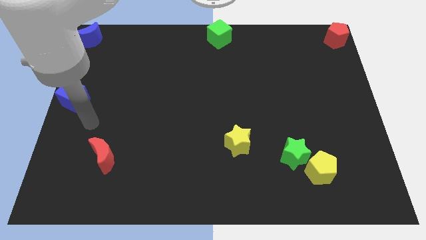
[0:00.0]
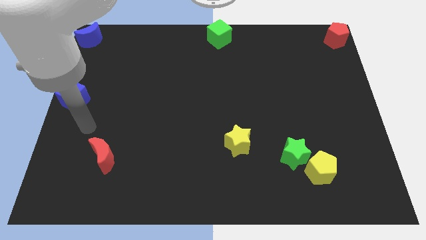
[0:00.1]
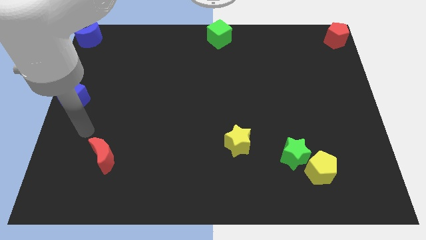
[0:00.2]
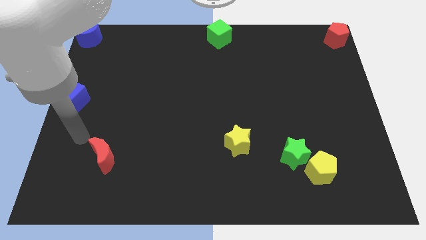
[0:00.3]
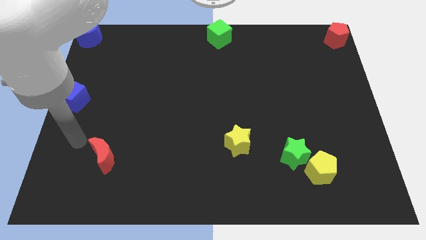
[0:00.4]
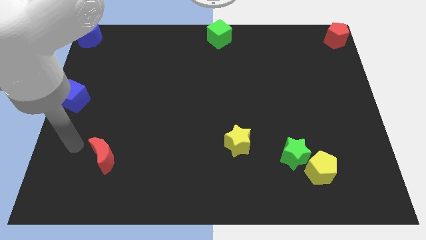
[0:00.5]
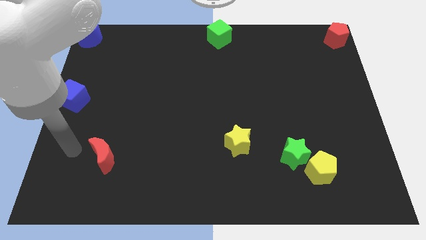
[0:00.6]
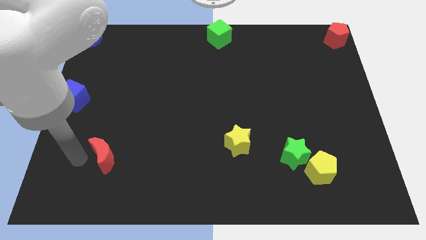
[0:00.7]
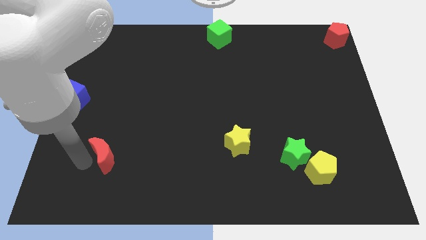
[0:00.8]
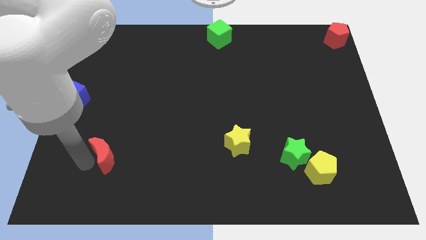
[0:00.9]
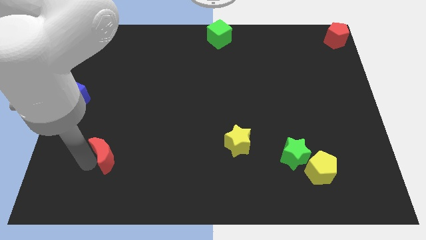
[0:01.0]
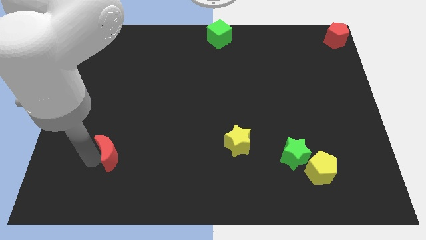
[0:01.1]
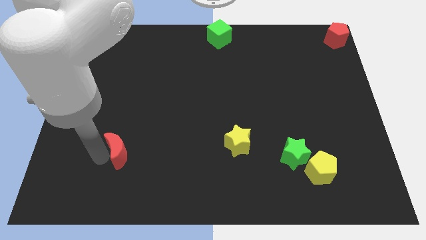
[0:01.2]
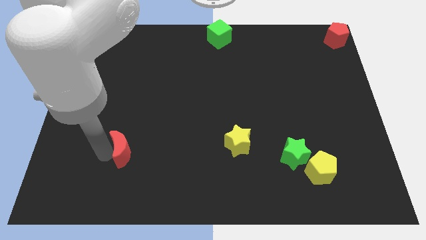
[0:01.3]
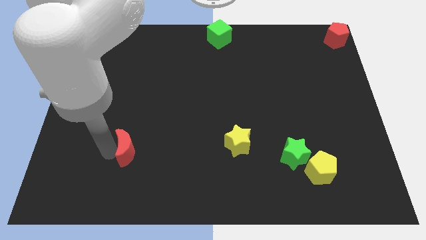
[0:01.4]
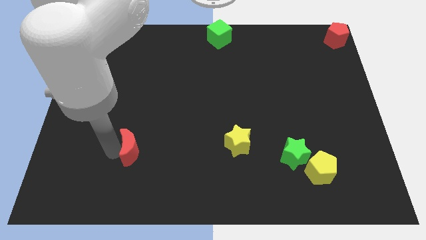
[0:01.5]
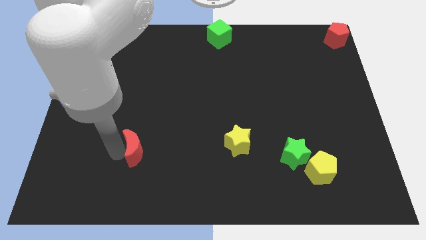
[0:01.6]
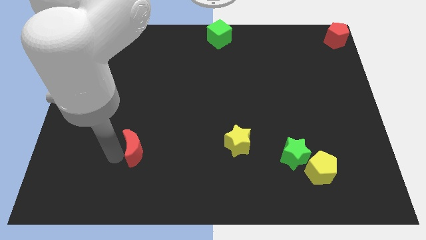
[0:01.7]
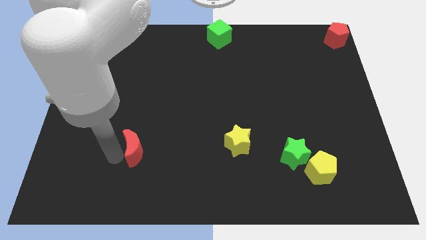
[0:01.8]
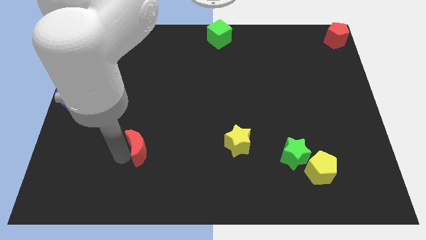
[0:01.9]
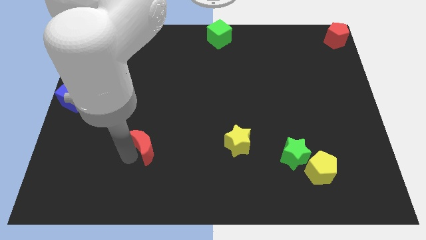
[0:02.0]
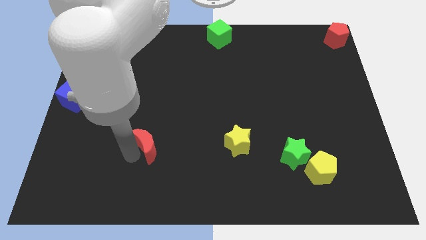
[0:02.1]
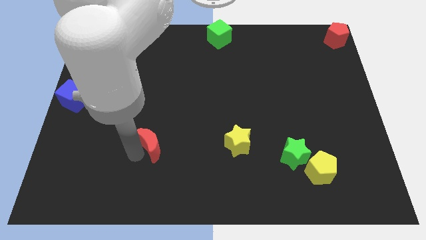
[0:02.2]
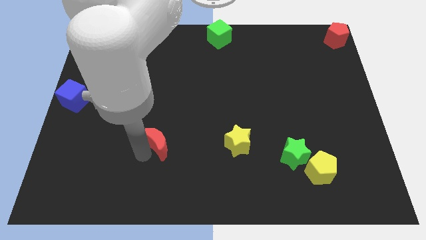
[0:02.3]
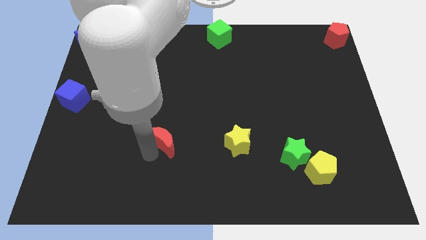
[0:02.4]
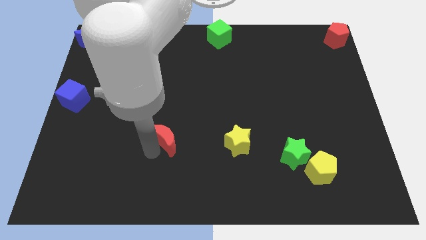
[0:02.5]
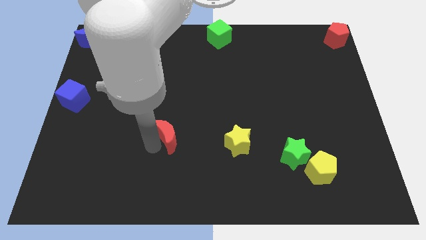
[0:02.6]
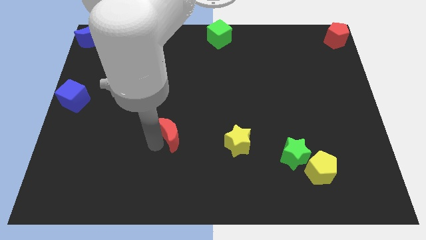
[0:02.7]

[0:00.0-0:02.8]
place the red crescent parallel left to the yellow star

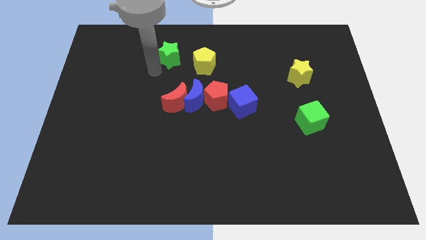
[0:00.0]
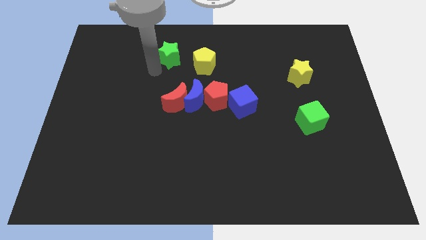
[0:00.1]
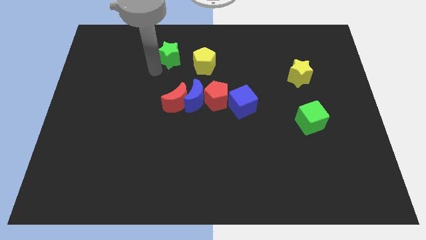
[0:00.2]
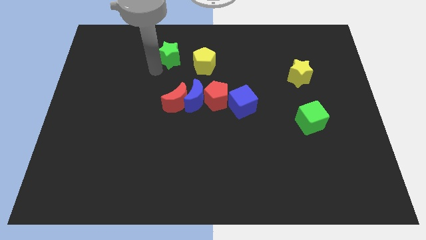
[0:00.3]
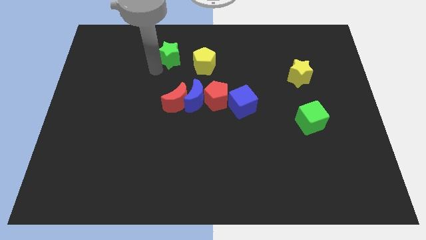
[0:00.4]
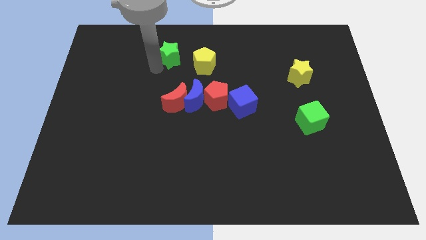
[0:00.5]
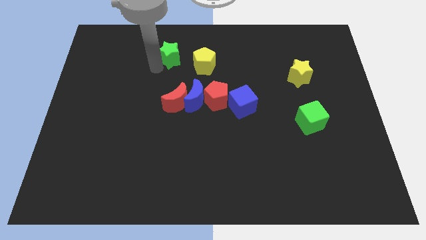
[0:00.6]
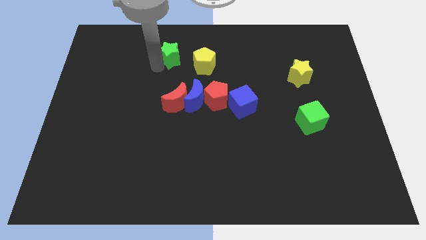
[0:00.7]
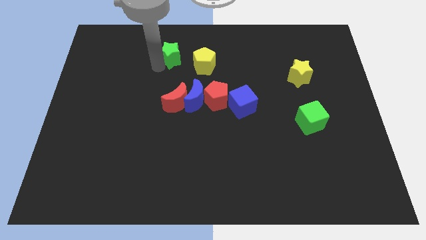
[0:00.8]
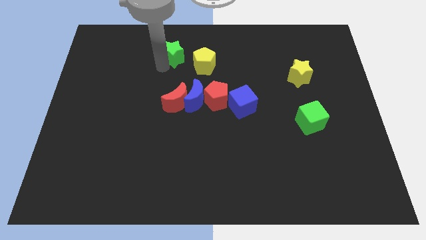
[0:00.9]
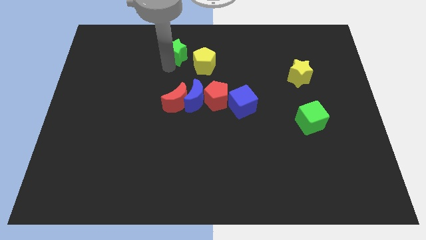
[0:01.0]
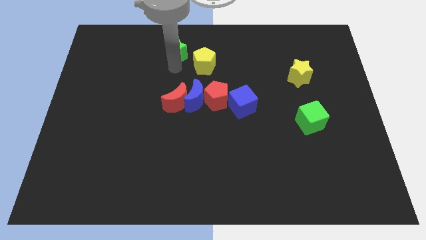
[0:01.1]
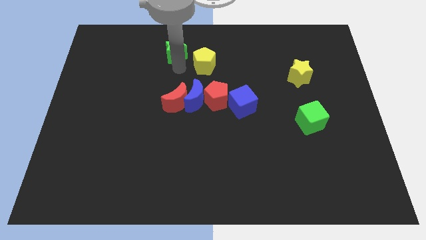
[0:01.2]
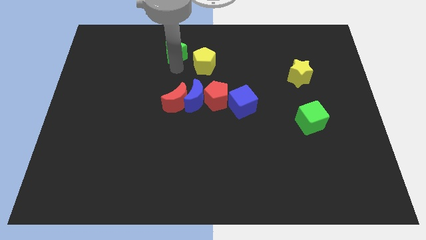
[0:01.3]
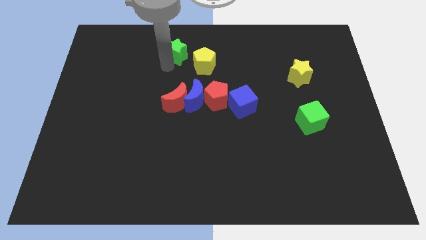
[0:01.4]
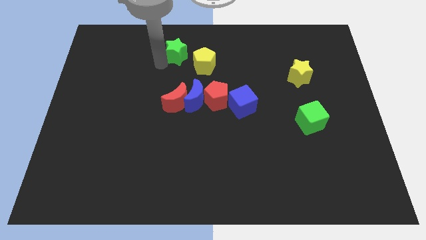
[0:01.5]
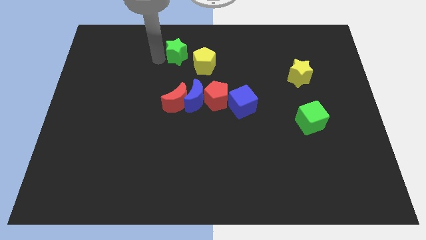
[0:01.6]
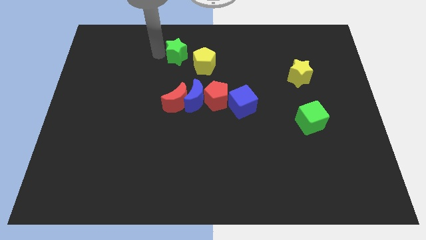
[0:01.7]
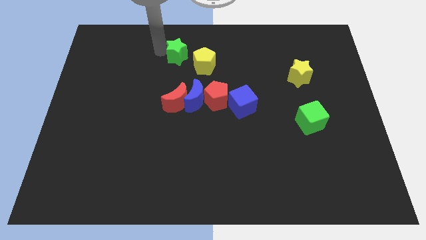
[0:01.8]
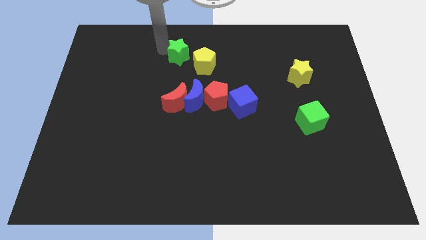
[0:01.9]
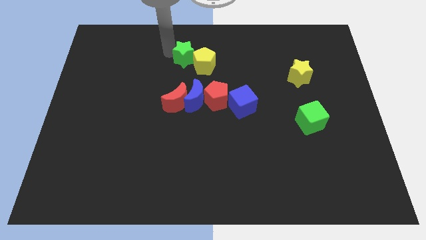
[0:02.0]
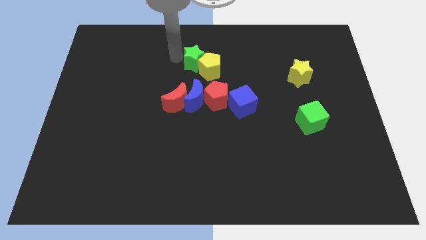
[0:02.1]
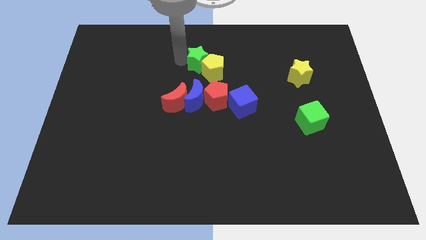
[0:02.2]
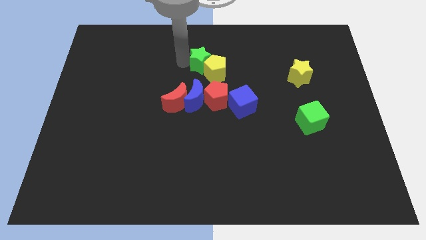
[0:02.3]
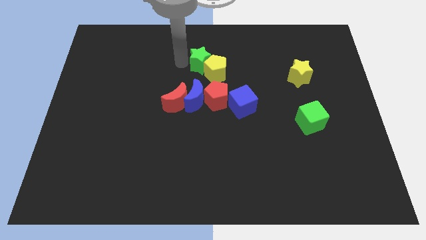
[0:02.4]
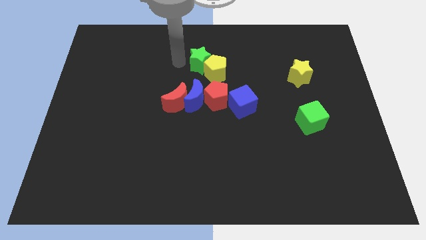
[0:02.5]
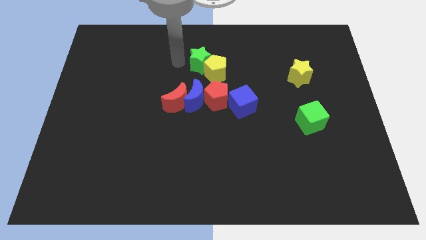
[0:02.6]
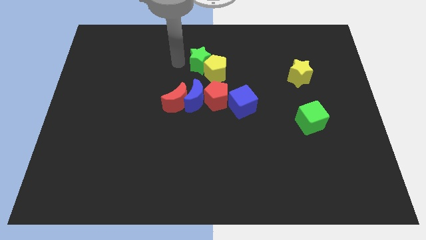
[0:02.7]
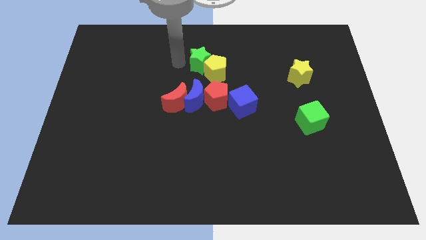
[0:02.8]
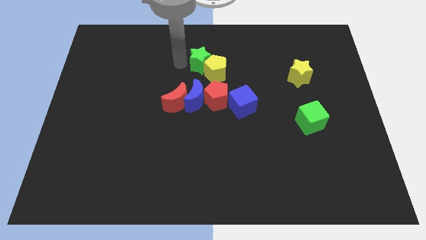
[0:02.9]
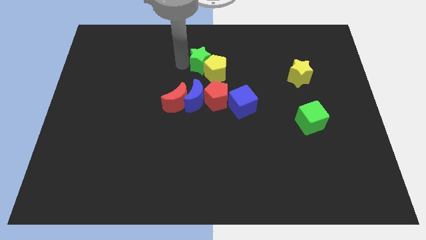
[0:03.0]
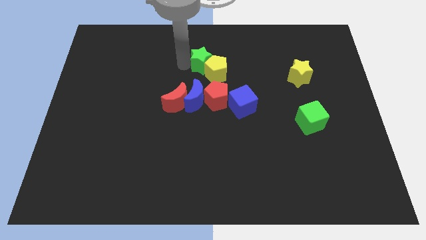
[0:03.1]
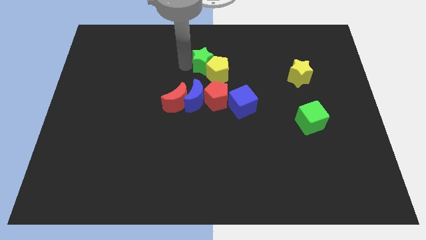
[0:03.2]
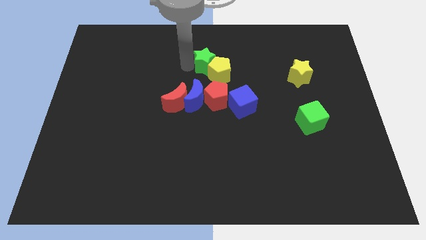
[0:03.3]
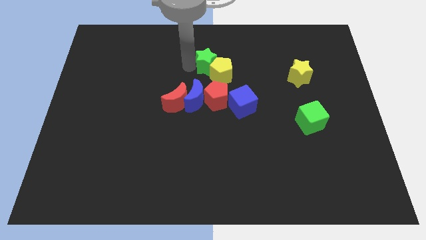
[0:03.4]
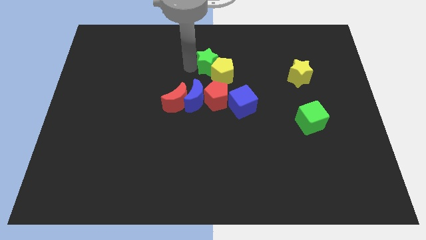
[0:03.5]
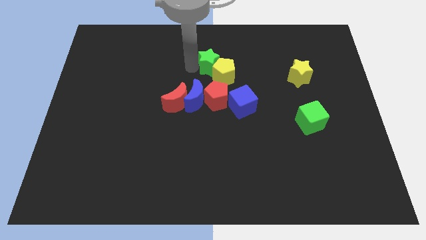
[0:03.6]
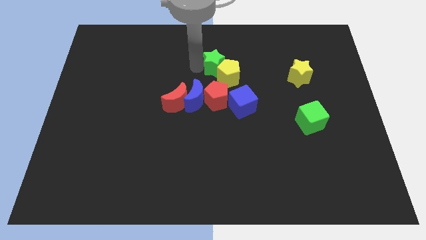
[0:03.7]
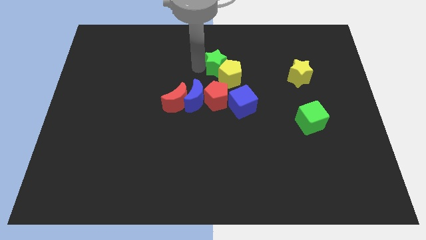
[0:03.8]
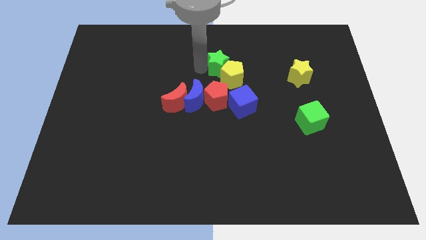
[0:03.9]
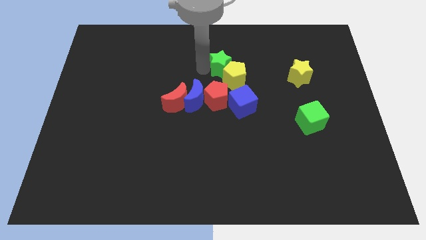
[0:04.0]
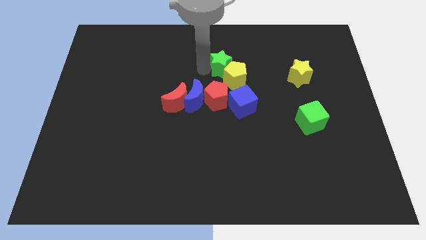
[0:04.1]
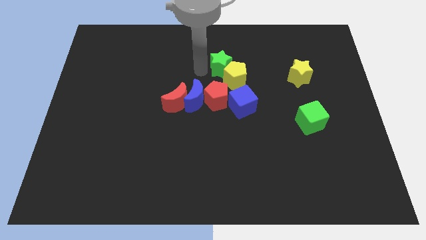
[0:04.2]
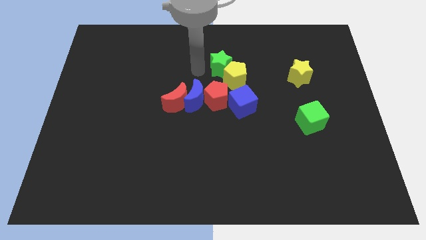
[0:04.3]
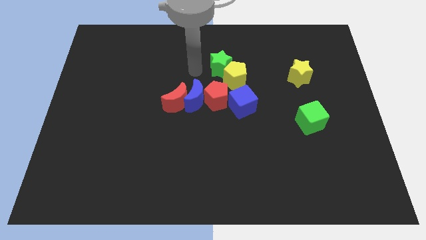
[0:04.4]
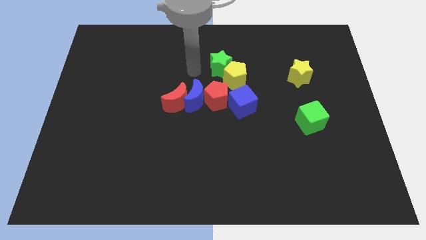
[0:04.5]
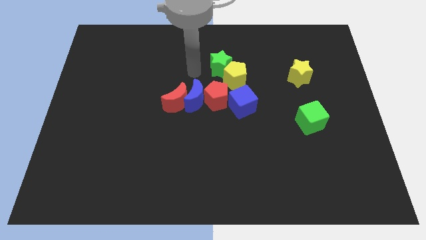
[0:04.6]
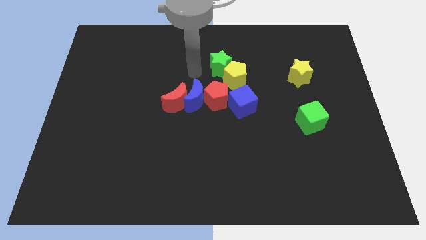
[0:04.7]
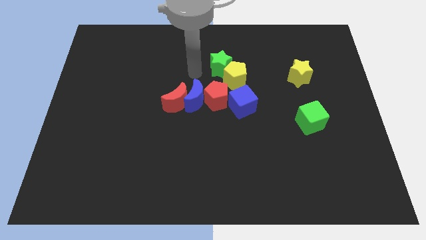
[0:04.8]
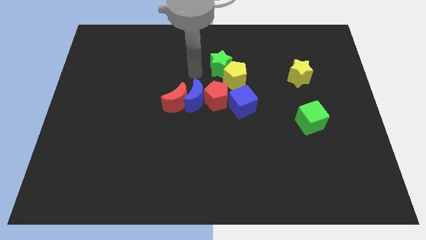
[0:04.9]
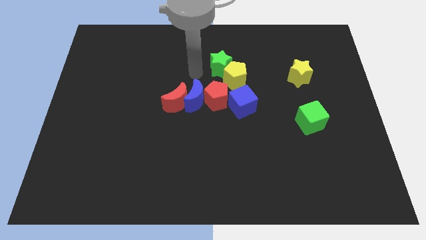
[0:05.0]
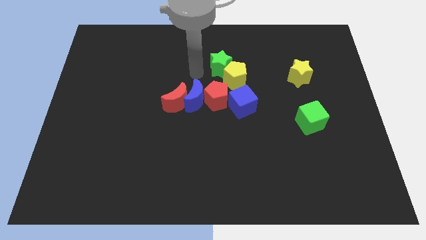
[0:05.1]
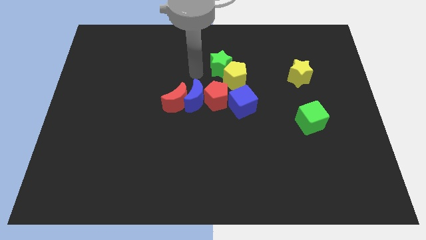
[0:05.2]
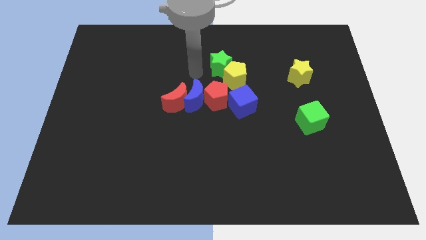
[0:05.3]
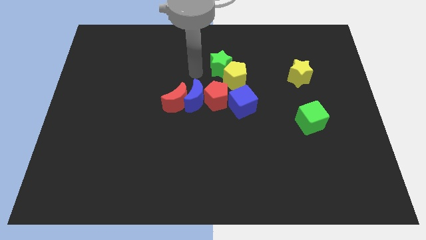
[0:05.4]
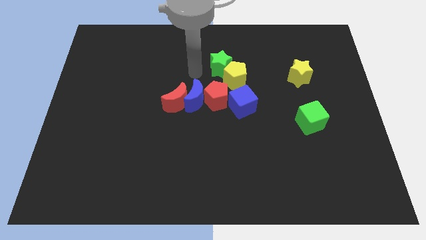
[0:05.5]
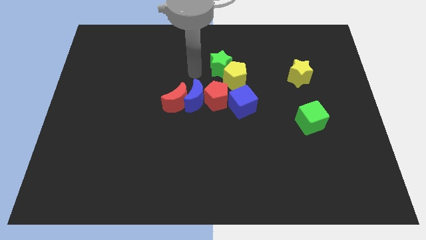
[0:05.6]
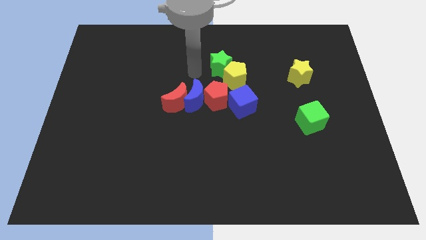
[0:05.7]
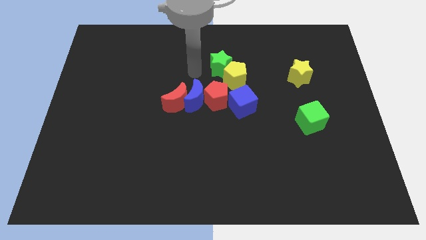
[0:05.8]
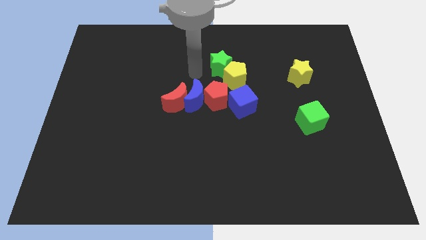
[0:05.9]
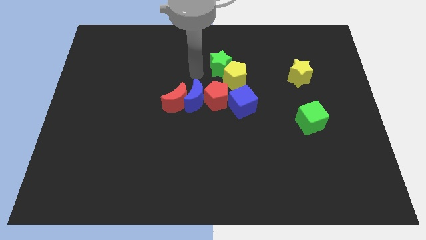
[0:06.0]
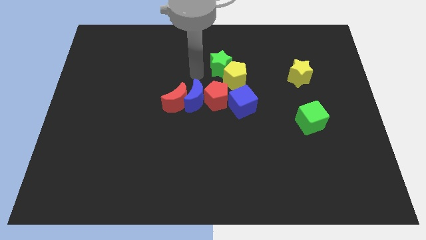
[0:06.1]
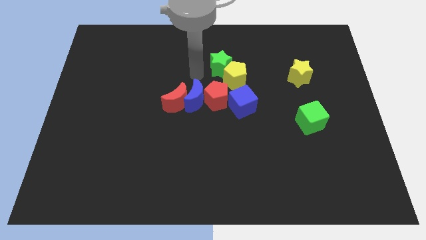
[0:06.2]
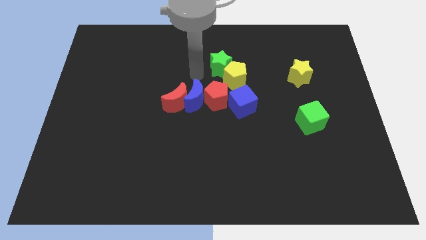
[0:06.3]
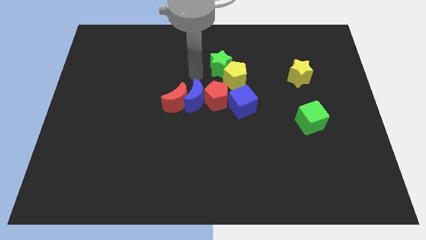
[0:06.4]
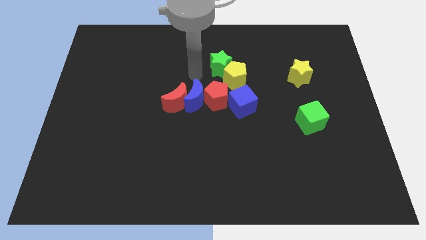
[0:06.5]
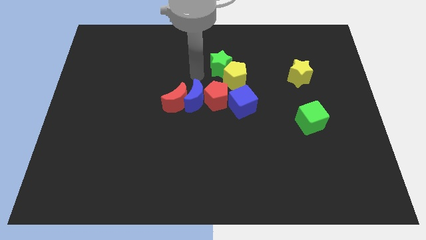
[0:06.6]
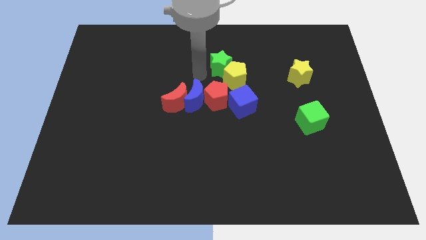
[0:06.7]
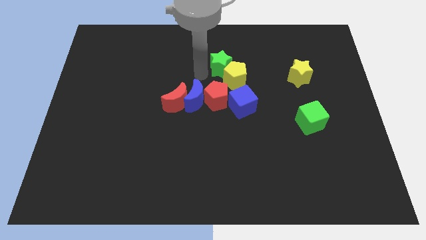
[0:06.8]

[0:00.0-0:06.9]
push the green star and yellow pentagon to the right side of the board
